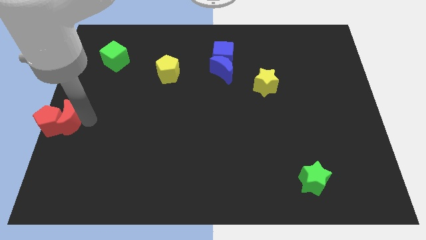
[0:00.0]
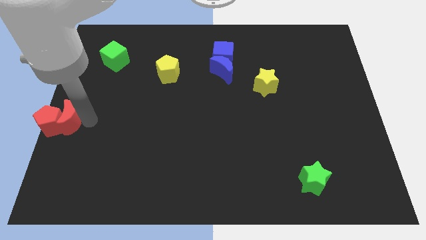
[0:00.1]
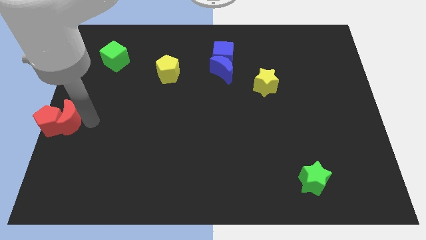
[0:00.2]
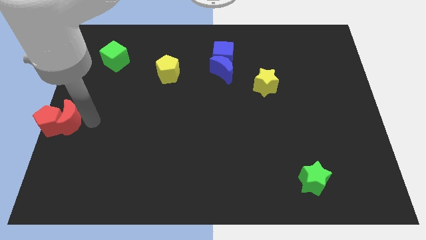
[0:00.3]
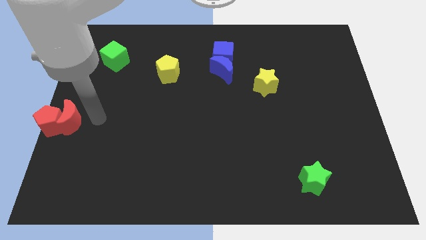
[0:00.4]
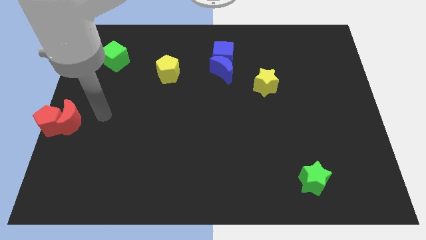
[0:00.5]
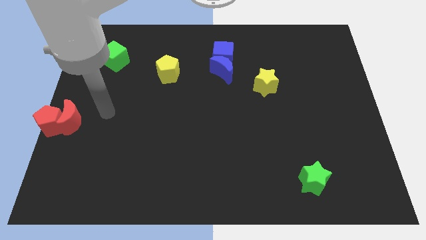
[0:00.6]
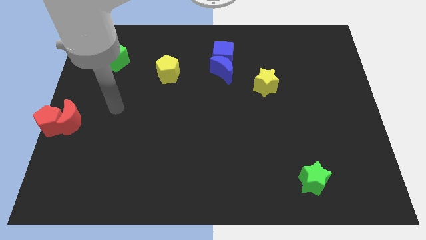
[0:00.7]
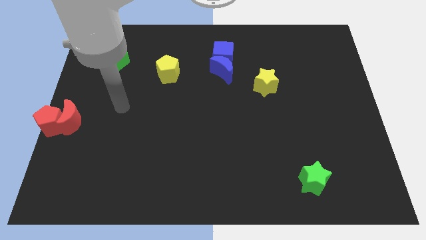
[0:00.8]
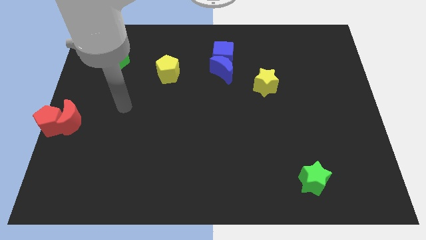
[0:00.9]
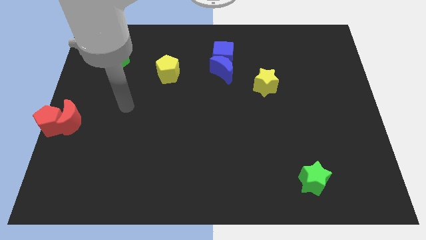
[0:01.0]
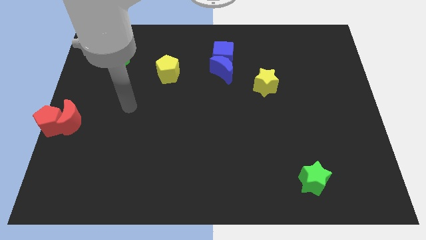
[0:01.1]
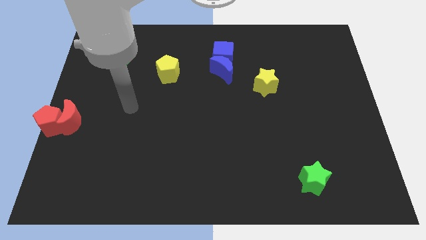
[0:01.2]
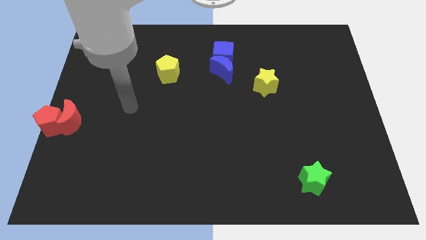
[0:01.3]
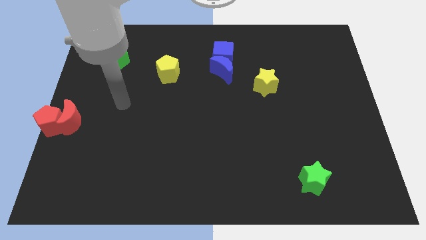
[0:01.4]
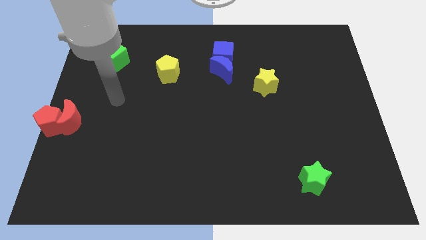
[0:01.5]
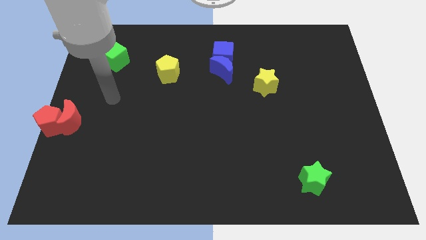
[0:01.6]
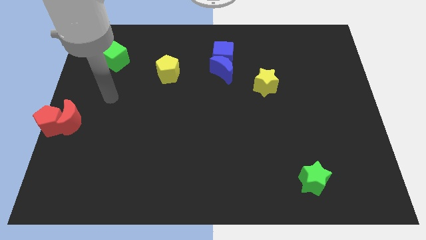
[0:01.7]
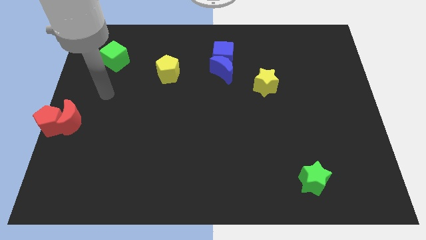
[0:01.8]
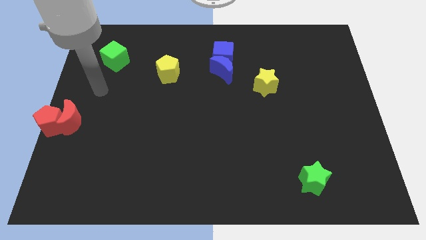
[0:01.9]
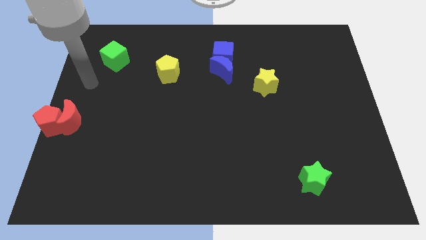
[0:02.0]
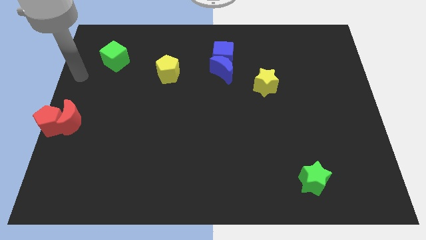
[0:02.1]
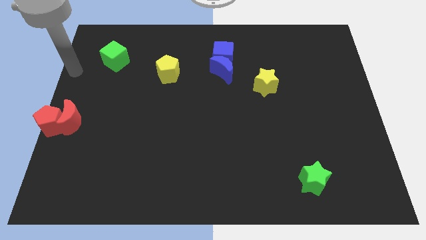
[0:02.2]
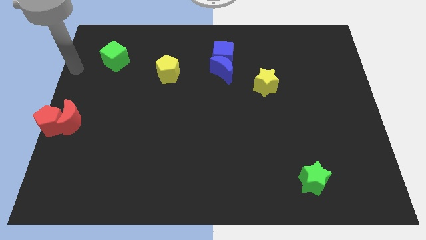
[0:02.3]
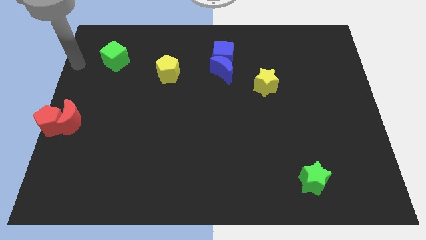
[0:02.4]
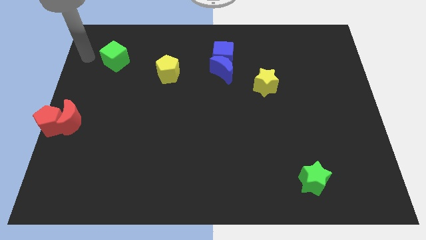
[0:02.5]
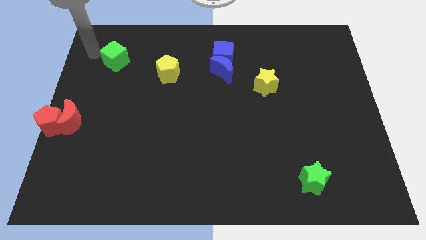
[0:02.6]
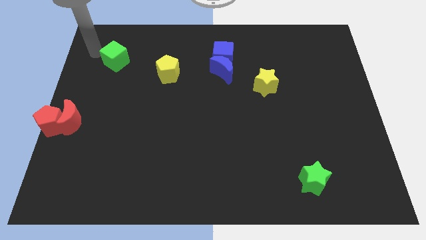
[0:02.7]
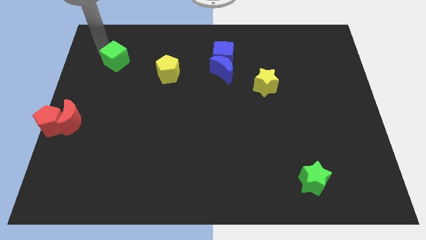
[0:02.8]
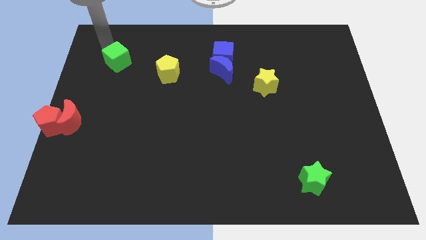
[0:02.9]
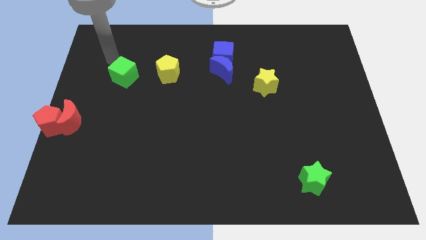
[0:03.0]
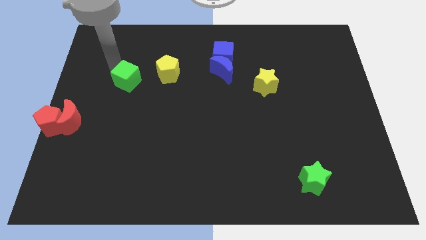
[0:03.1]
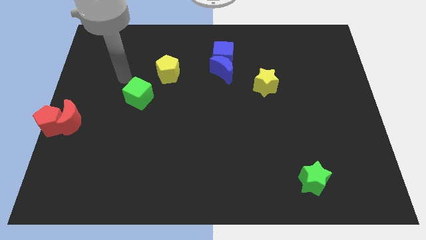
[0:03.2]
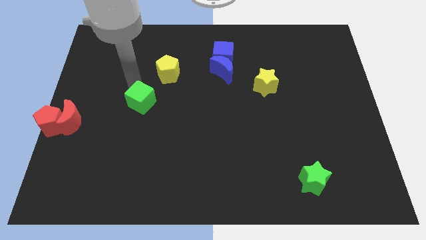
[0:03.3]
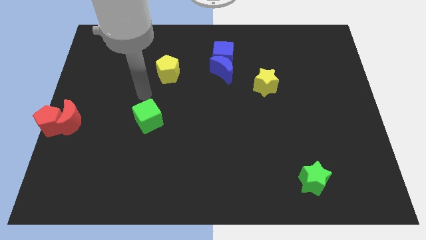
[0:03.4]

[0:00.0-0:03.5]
drag the green cube diagonally bottom left to the yellow pentagon

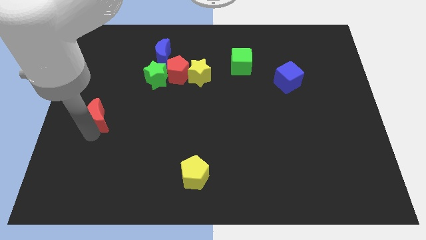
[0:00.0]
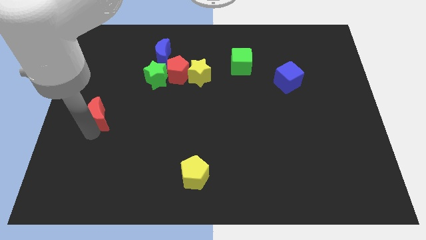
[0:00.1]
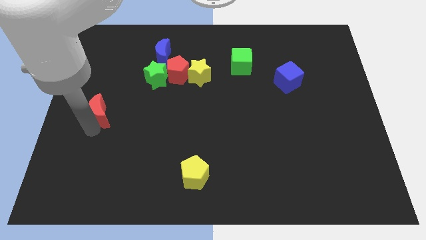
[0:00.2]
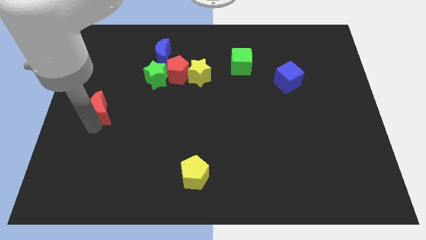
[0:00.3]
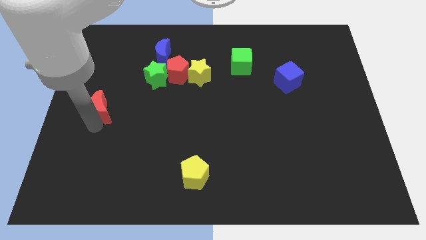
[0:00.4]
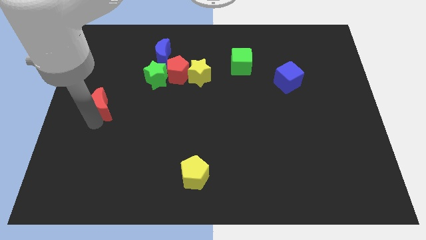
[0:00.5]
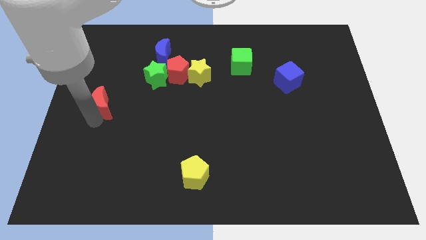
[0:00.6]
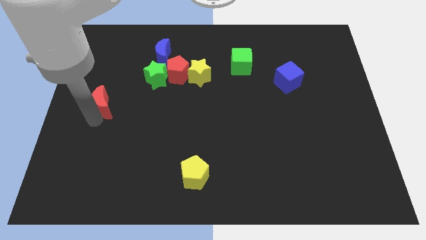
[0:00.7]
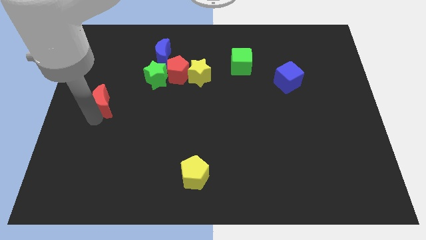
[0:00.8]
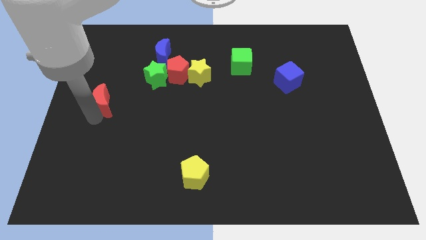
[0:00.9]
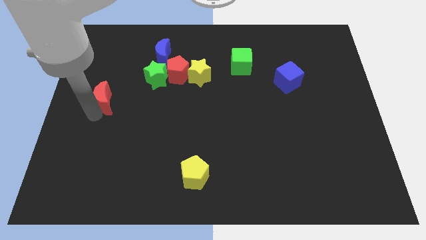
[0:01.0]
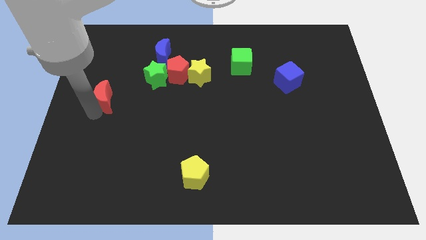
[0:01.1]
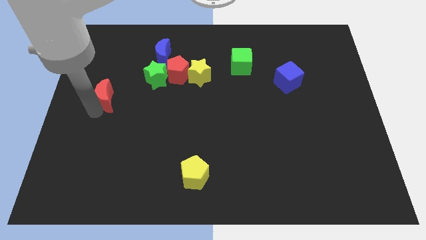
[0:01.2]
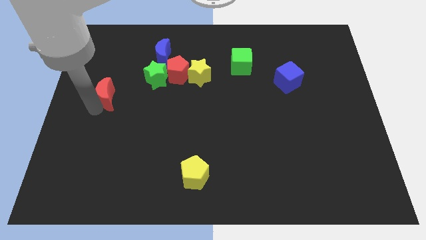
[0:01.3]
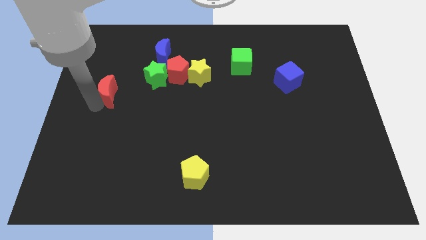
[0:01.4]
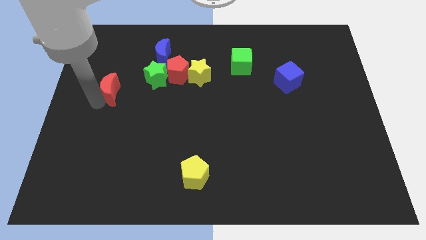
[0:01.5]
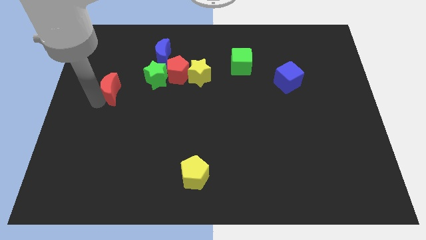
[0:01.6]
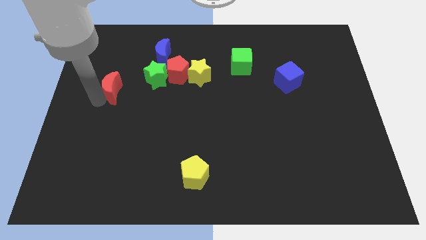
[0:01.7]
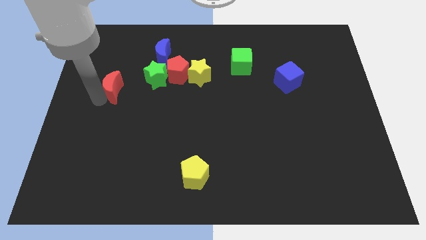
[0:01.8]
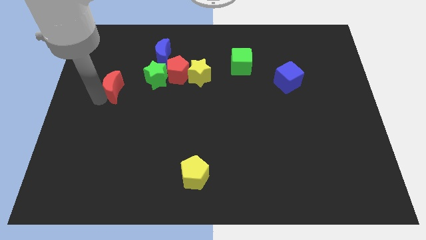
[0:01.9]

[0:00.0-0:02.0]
place red moon parallel to green star

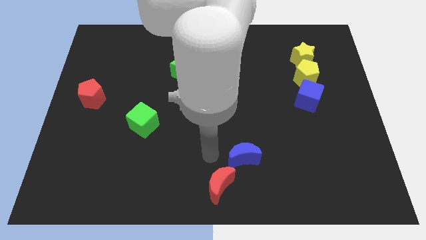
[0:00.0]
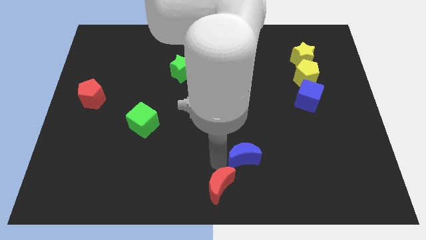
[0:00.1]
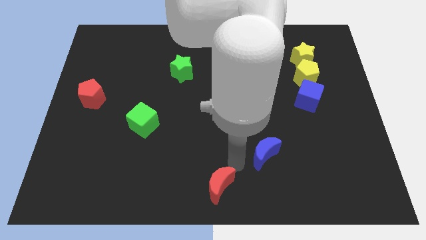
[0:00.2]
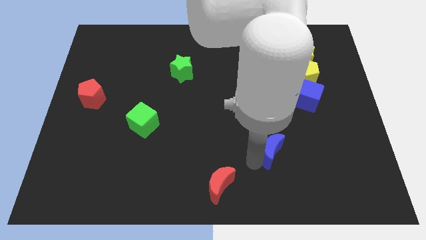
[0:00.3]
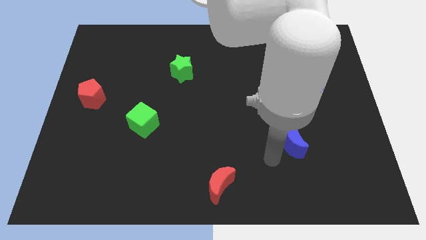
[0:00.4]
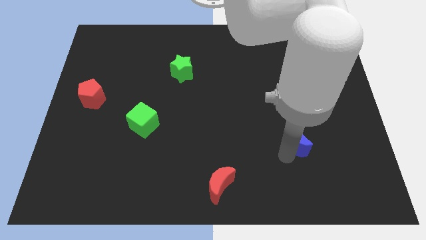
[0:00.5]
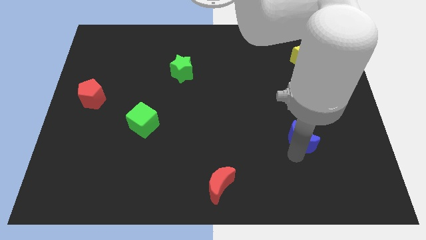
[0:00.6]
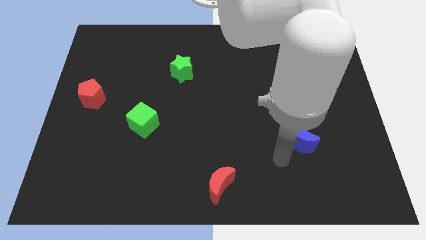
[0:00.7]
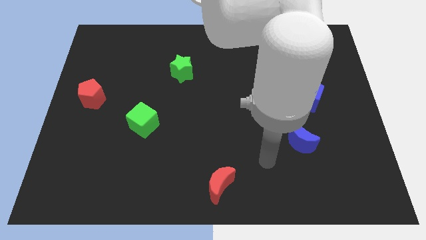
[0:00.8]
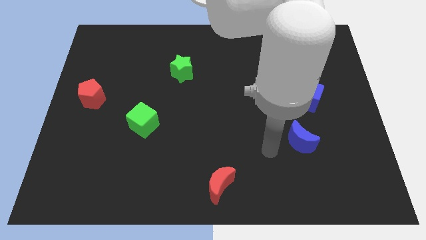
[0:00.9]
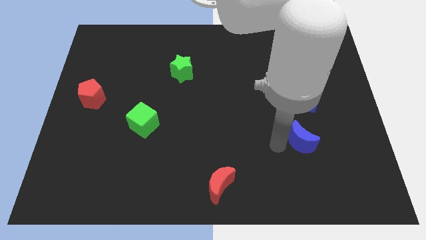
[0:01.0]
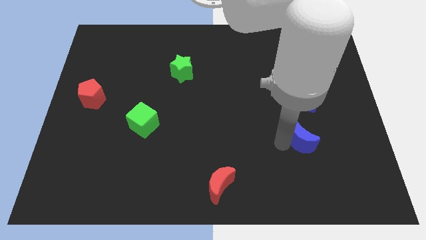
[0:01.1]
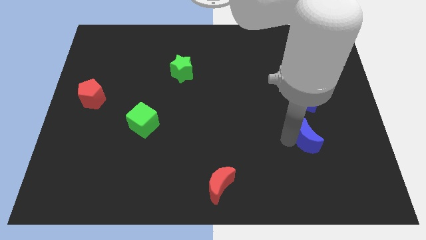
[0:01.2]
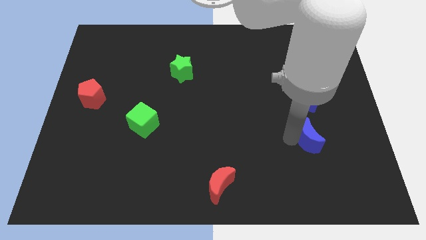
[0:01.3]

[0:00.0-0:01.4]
move blue moon apart from red moon

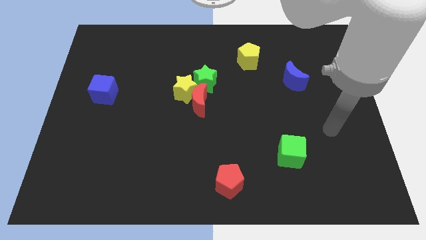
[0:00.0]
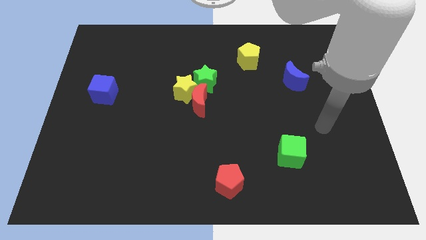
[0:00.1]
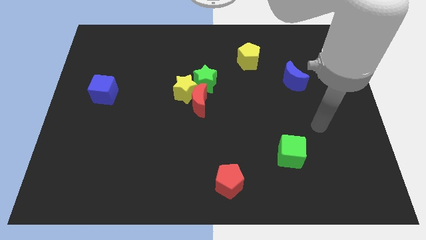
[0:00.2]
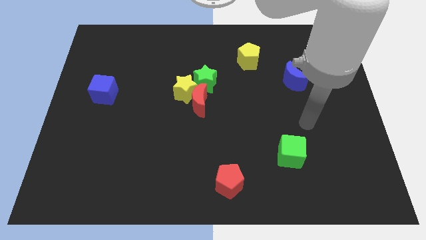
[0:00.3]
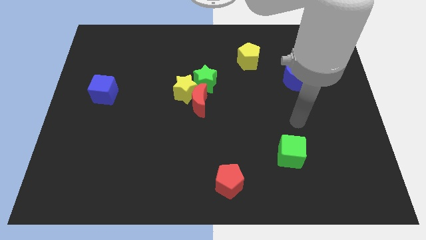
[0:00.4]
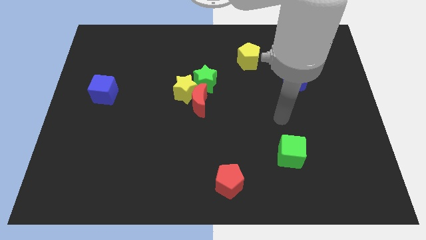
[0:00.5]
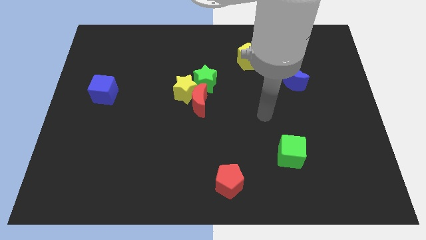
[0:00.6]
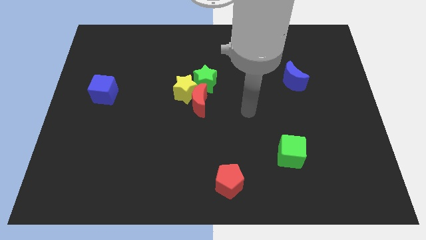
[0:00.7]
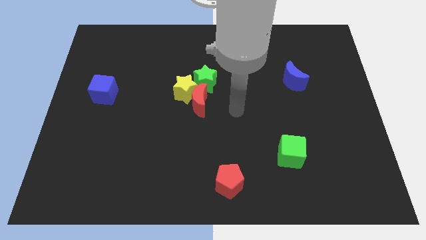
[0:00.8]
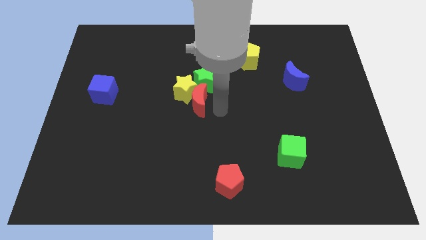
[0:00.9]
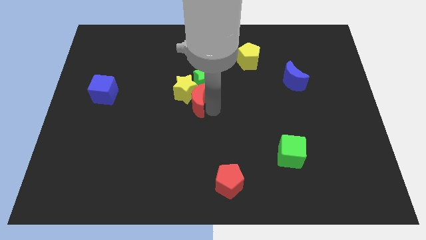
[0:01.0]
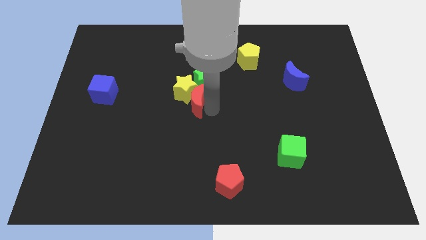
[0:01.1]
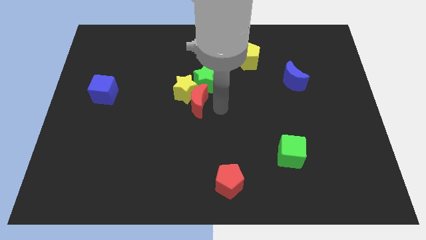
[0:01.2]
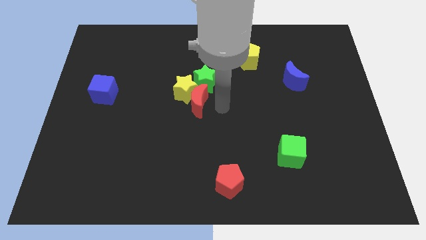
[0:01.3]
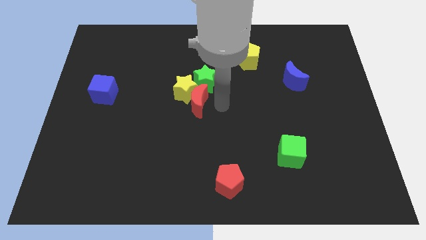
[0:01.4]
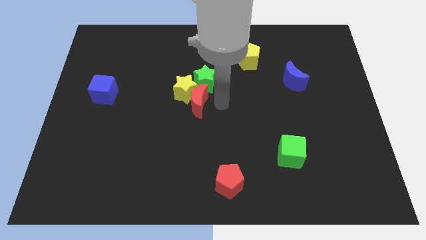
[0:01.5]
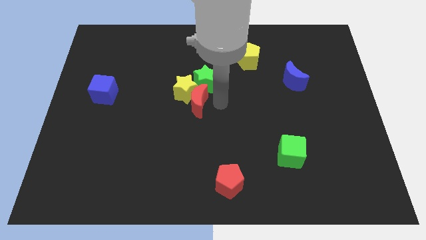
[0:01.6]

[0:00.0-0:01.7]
move your arm towards the red crescent

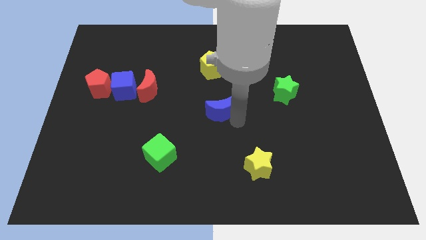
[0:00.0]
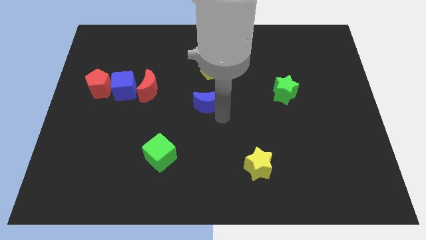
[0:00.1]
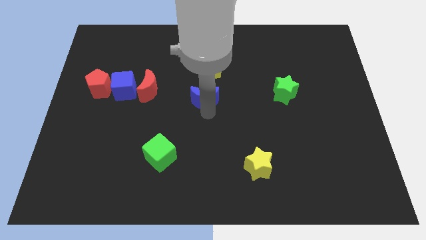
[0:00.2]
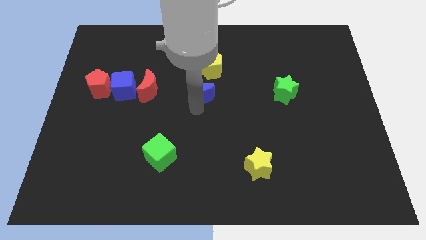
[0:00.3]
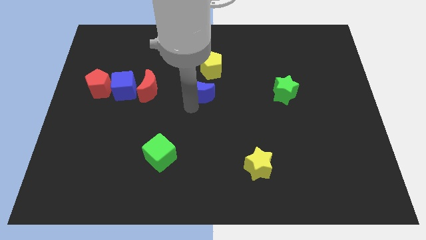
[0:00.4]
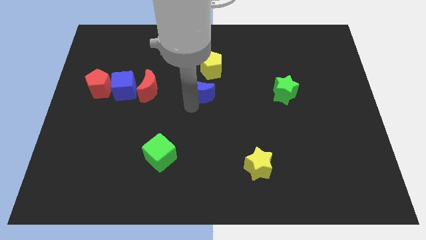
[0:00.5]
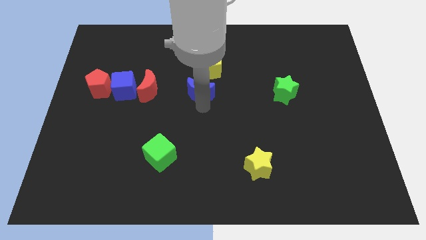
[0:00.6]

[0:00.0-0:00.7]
push the blue moon below to the yellow pentagon
